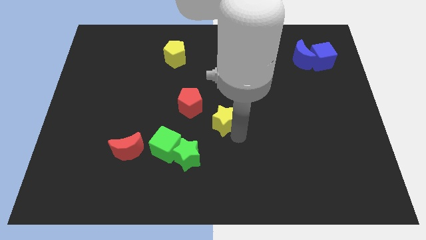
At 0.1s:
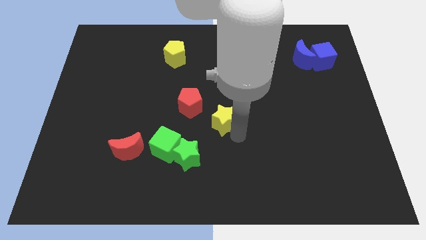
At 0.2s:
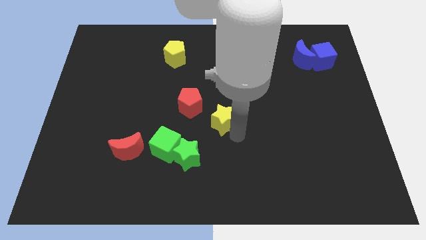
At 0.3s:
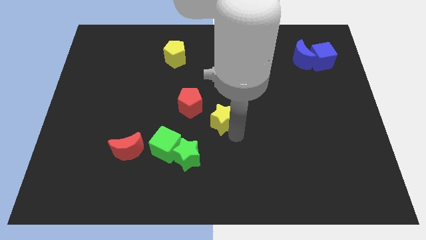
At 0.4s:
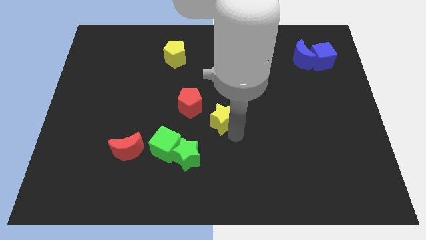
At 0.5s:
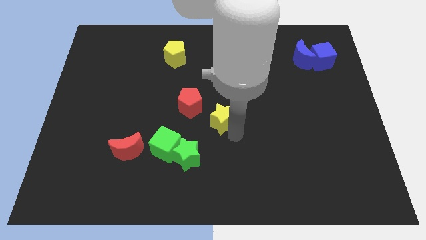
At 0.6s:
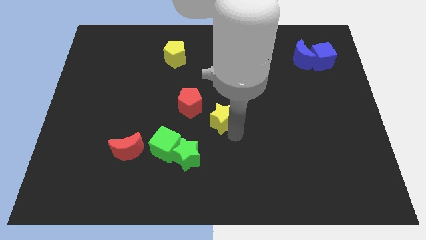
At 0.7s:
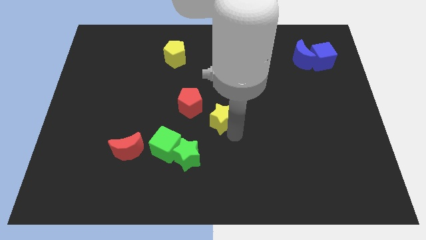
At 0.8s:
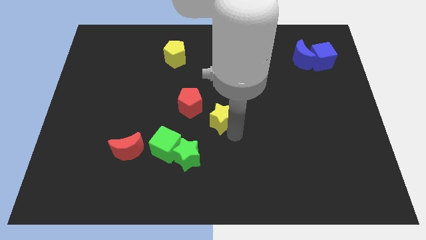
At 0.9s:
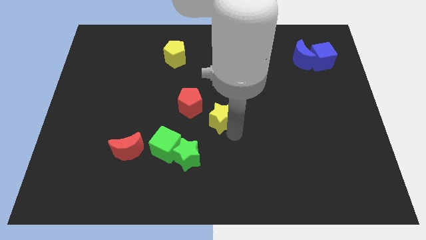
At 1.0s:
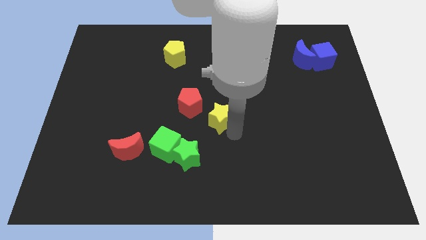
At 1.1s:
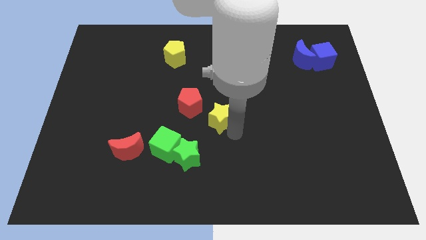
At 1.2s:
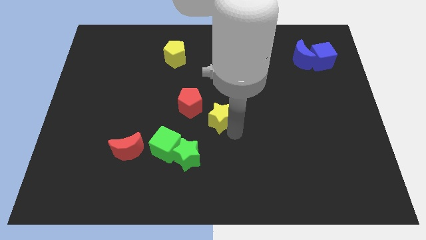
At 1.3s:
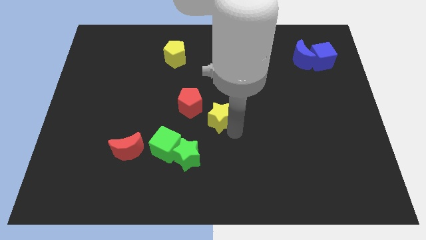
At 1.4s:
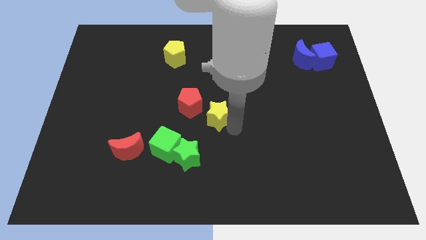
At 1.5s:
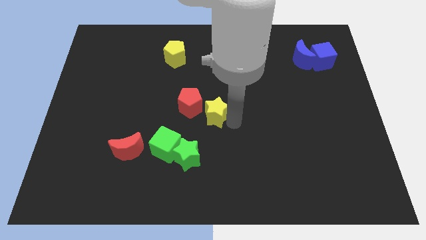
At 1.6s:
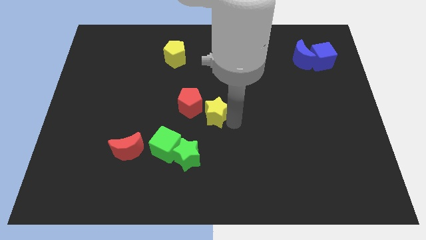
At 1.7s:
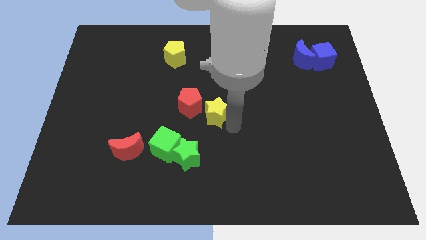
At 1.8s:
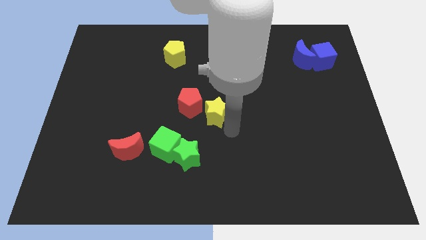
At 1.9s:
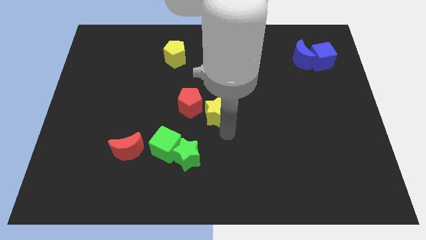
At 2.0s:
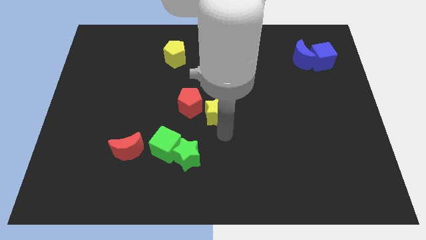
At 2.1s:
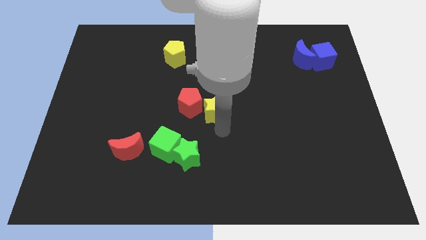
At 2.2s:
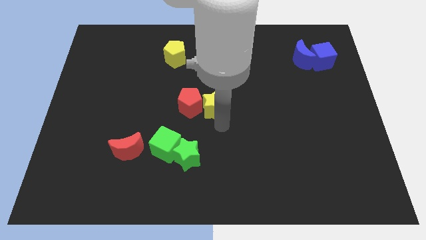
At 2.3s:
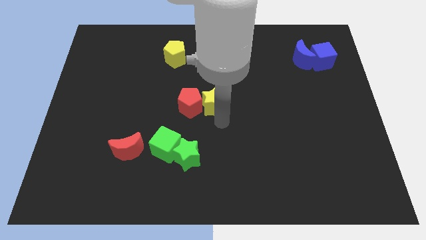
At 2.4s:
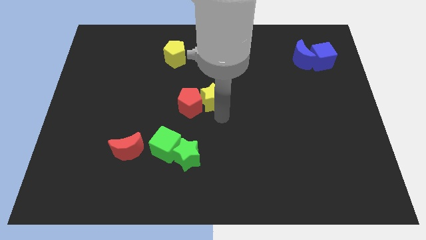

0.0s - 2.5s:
push the yellow star to the right of the red pentagon

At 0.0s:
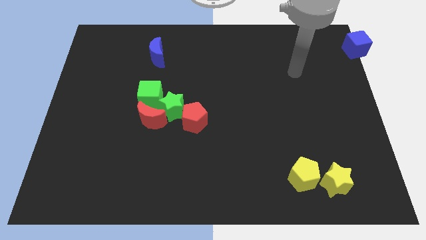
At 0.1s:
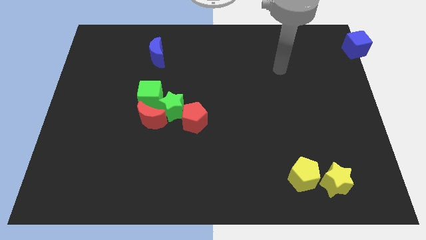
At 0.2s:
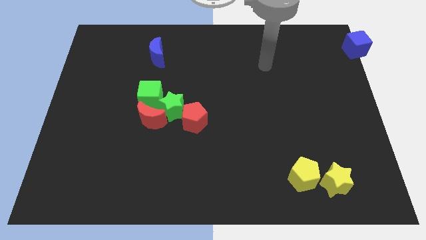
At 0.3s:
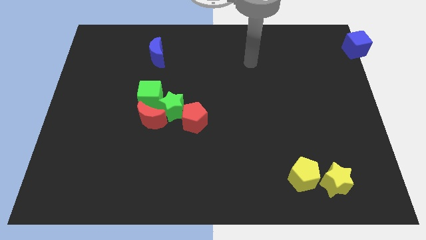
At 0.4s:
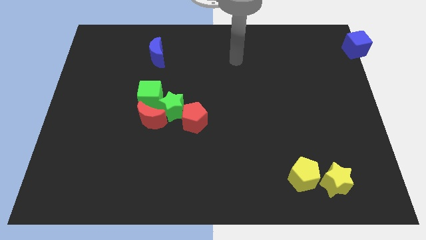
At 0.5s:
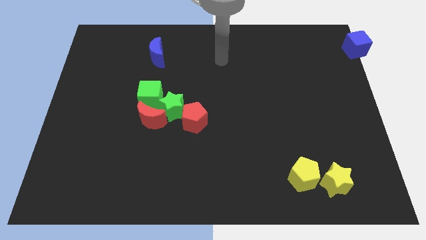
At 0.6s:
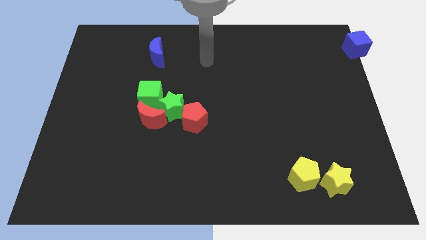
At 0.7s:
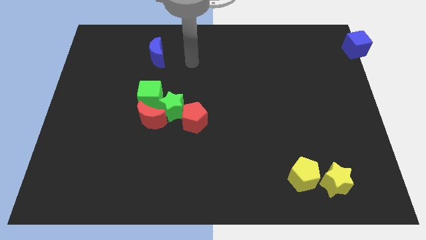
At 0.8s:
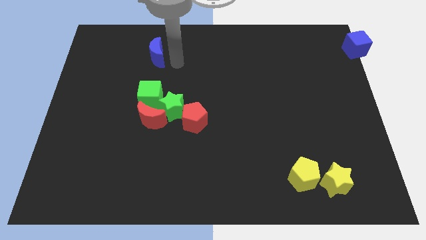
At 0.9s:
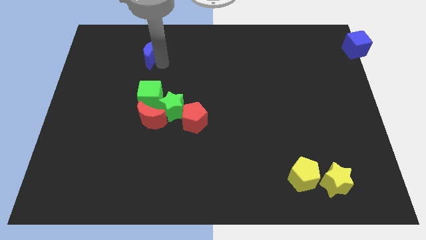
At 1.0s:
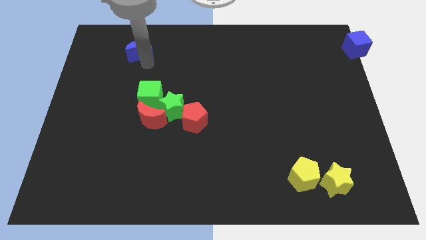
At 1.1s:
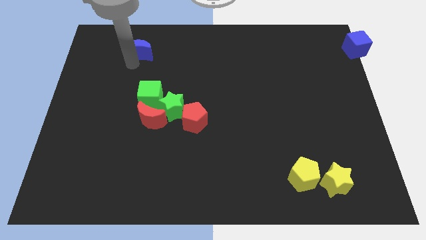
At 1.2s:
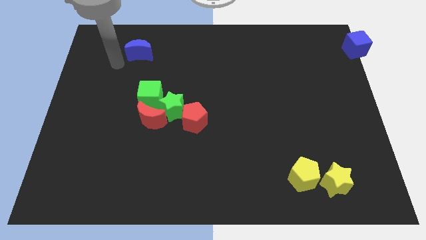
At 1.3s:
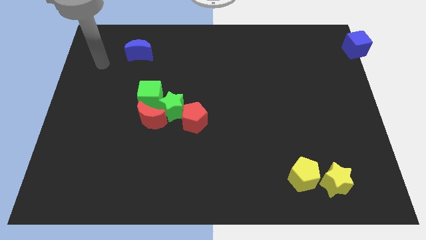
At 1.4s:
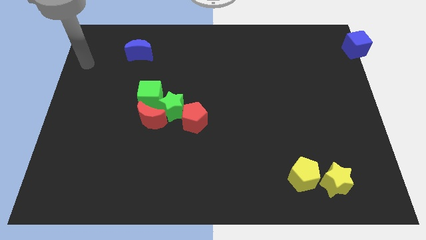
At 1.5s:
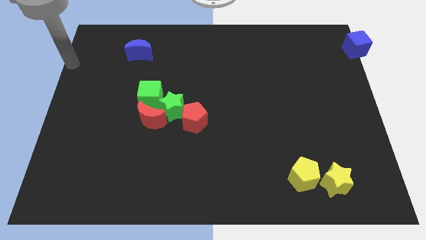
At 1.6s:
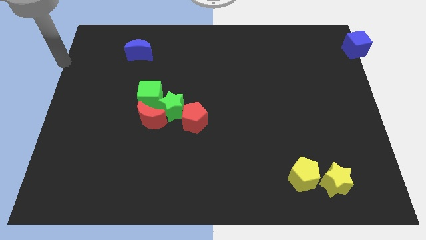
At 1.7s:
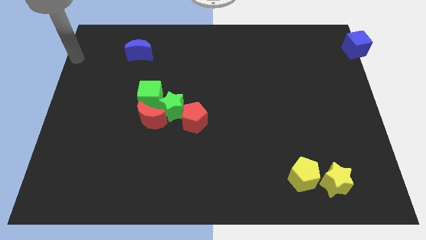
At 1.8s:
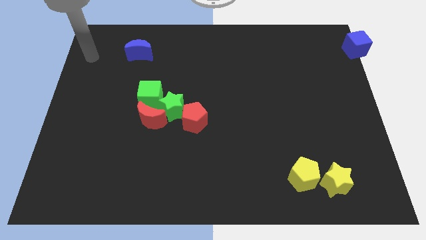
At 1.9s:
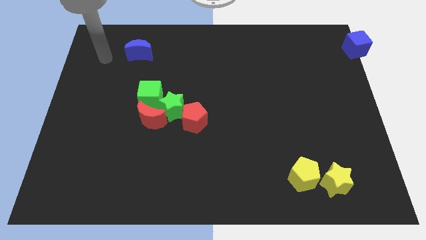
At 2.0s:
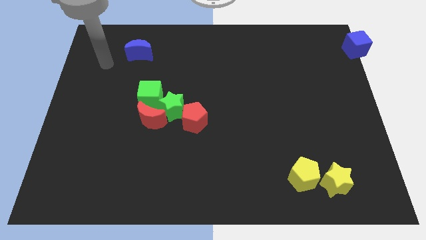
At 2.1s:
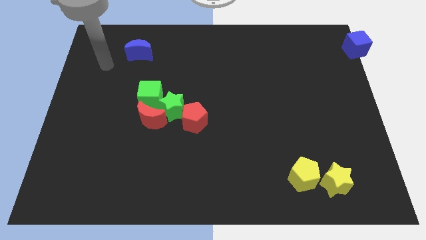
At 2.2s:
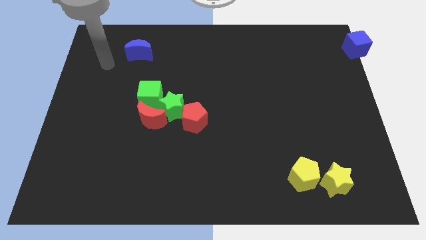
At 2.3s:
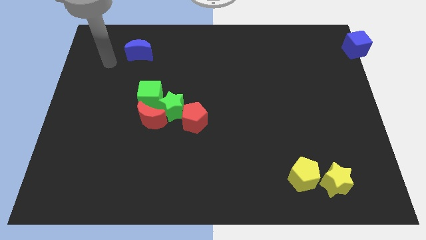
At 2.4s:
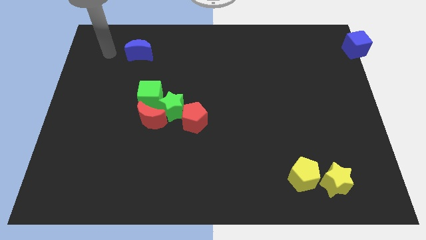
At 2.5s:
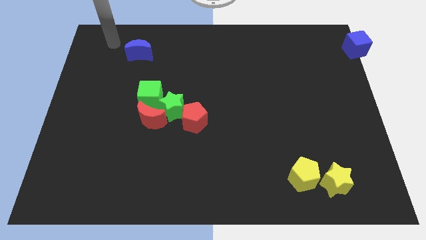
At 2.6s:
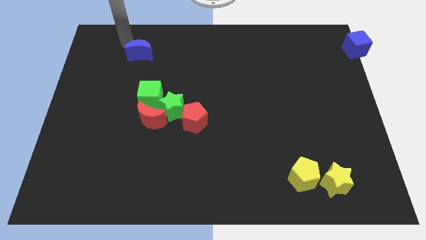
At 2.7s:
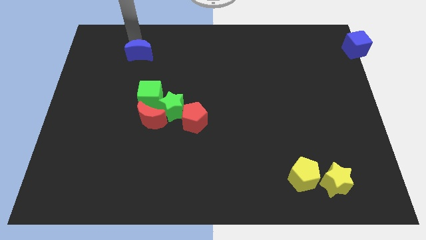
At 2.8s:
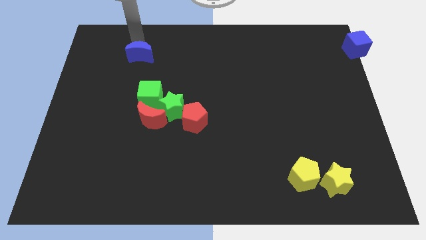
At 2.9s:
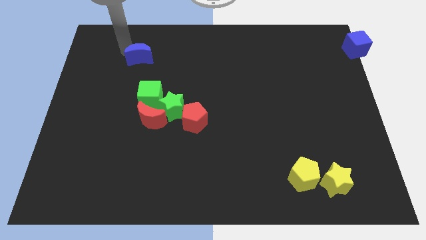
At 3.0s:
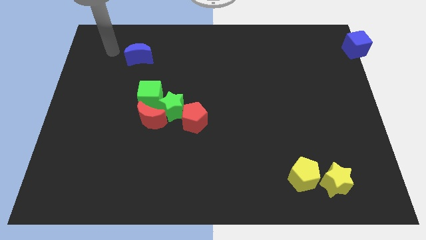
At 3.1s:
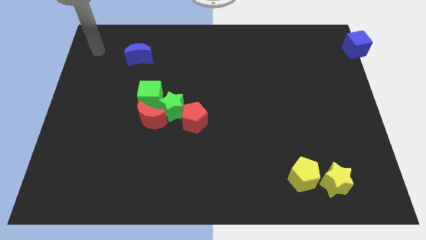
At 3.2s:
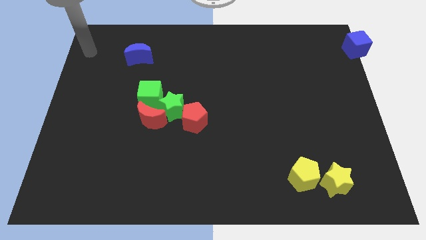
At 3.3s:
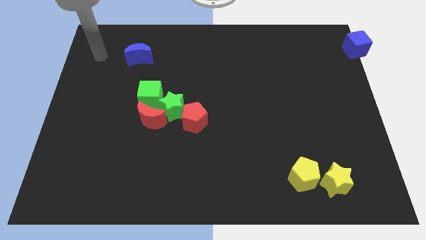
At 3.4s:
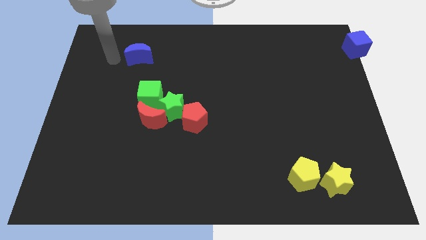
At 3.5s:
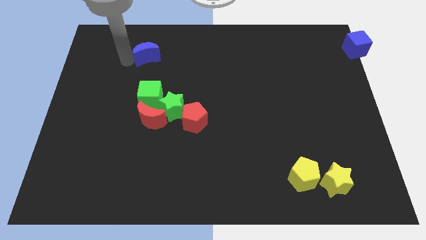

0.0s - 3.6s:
place the blue moon above the green cube

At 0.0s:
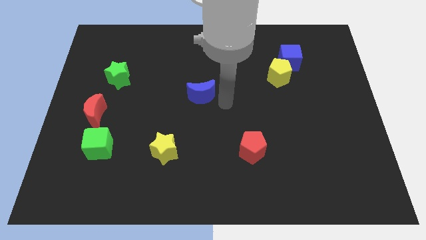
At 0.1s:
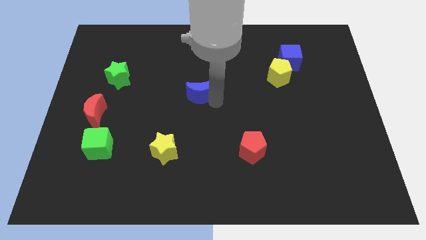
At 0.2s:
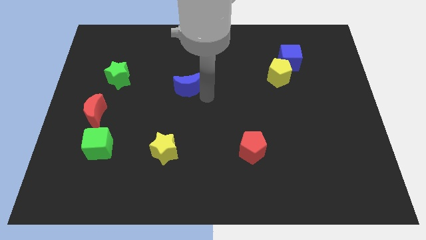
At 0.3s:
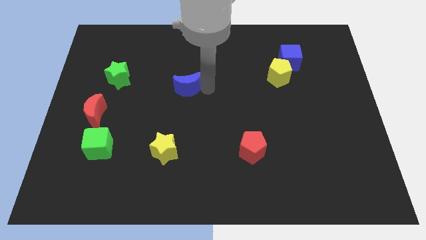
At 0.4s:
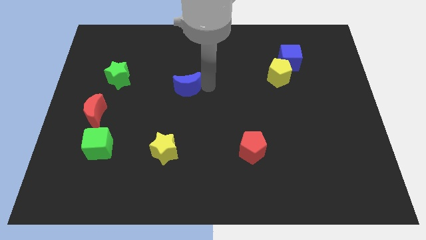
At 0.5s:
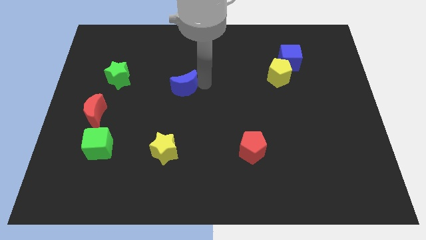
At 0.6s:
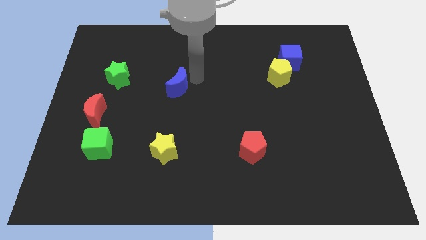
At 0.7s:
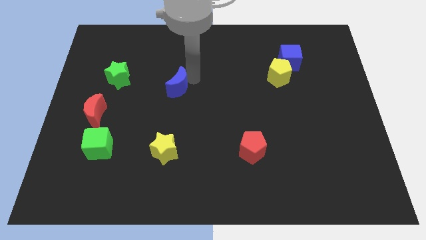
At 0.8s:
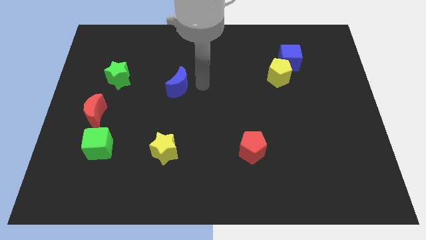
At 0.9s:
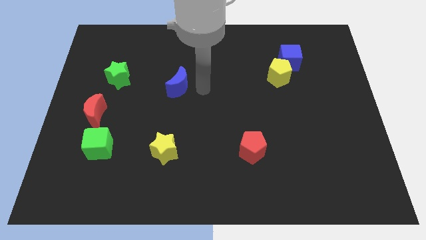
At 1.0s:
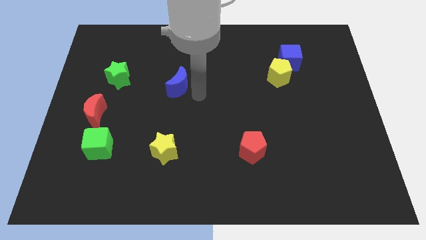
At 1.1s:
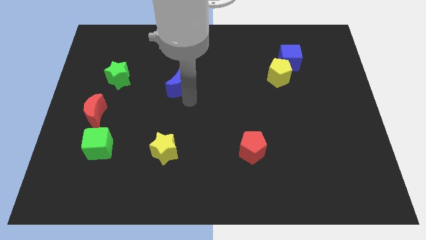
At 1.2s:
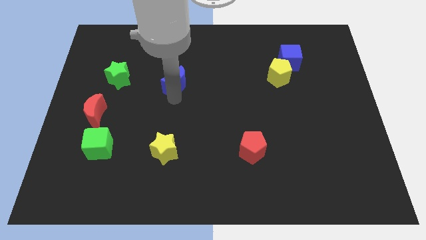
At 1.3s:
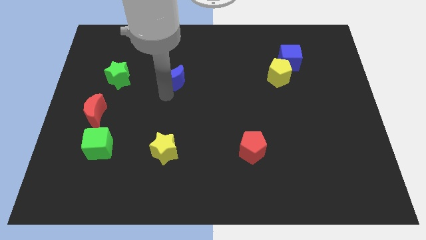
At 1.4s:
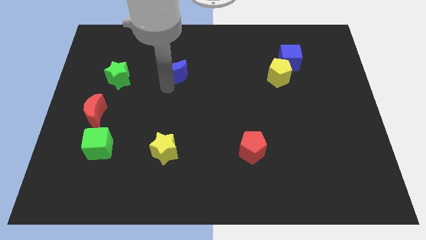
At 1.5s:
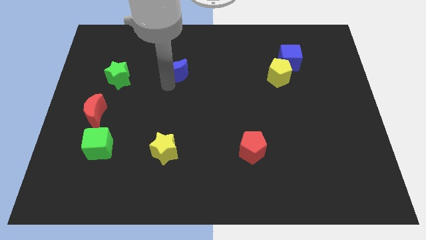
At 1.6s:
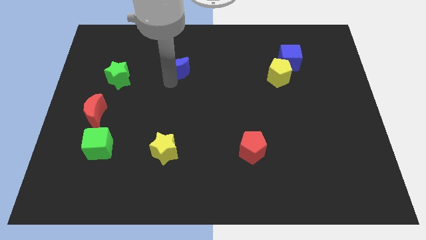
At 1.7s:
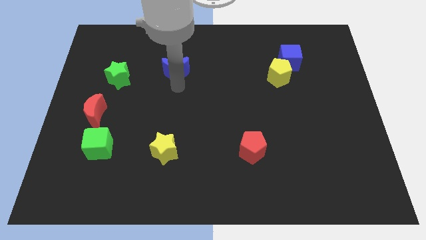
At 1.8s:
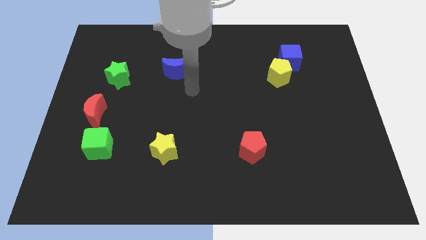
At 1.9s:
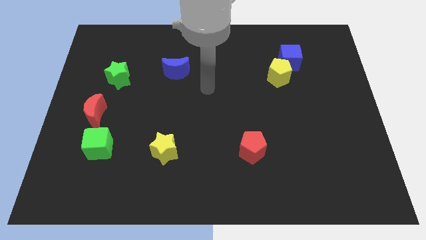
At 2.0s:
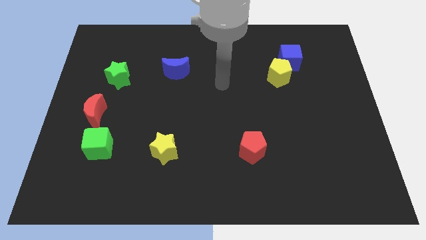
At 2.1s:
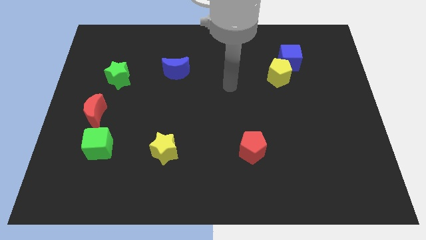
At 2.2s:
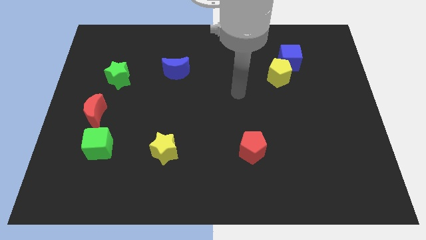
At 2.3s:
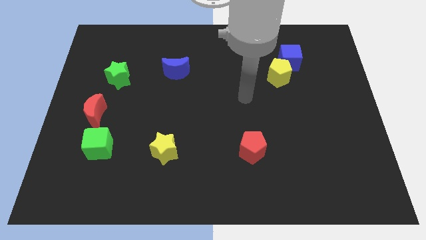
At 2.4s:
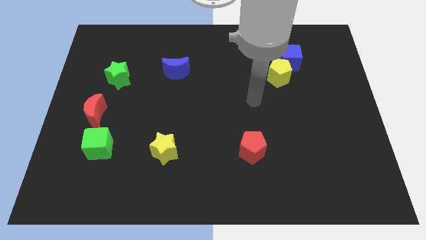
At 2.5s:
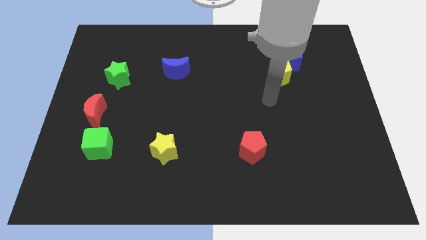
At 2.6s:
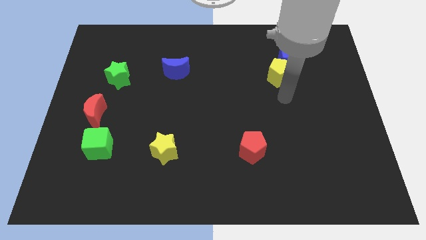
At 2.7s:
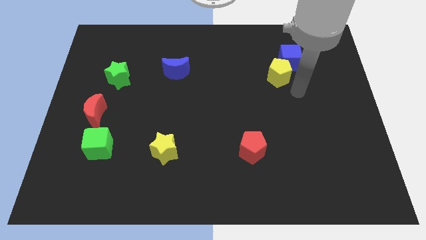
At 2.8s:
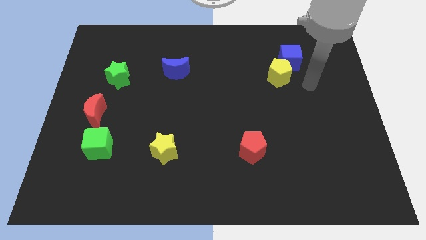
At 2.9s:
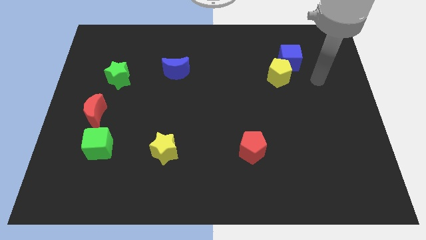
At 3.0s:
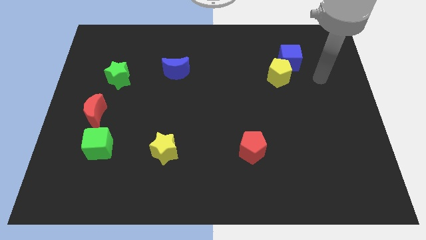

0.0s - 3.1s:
place the blue moon vertically above the yellow star
